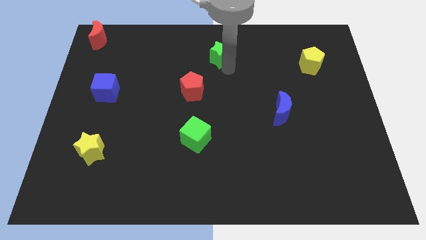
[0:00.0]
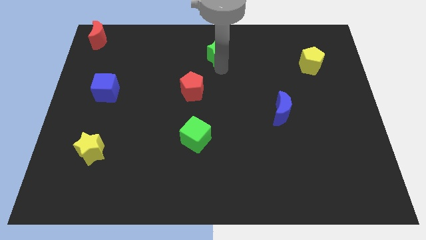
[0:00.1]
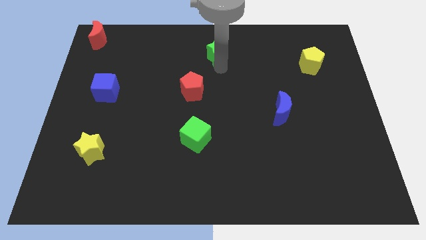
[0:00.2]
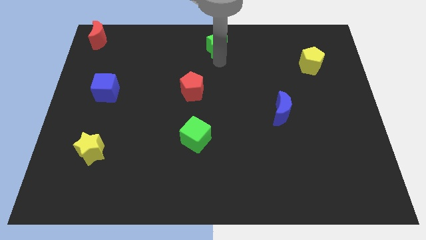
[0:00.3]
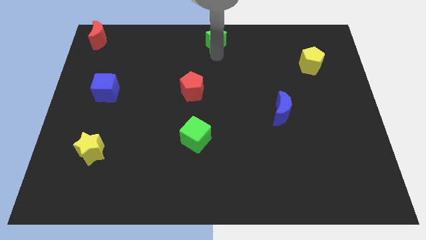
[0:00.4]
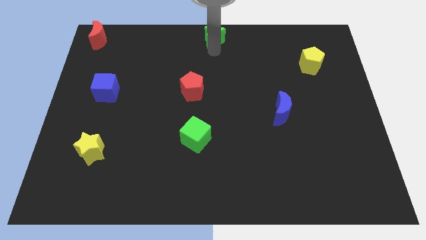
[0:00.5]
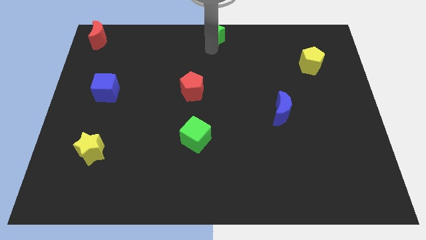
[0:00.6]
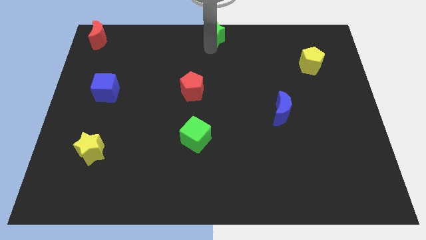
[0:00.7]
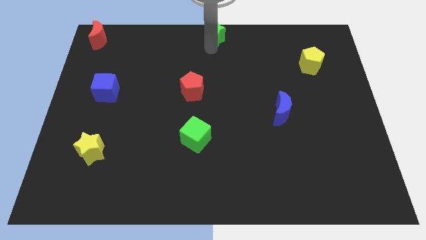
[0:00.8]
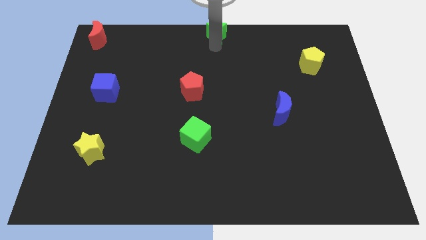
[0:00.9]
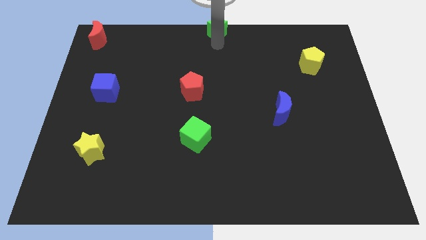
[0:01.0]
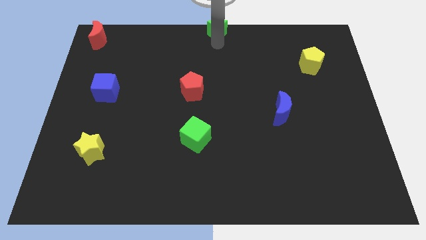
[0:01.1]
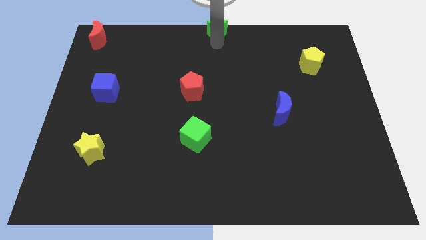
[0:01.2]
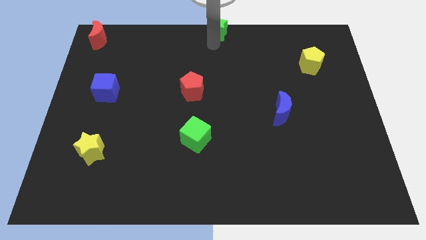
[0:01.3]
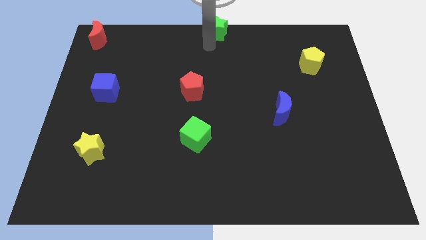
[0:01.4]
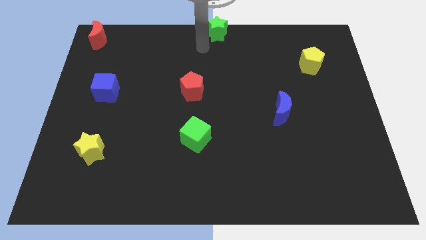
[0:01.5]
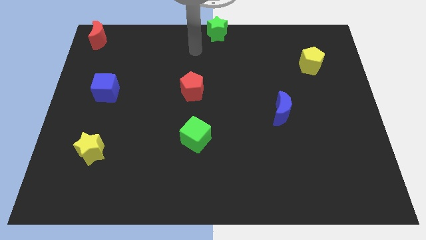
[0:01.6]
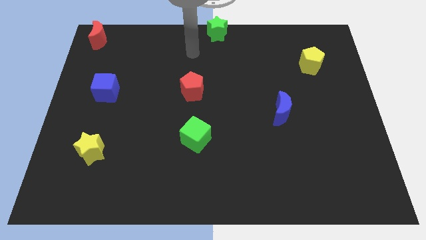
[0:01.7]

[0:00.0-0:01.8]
place the green star in the top middle

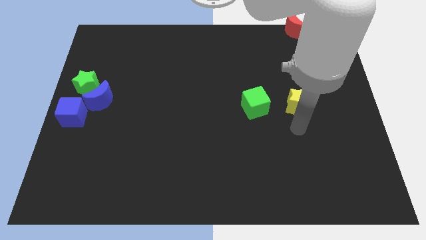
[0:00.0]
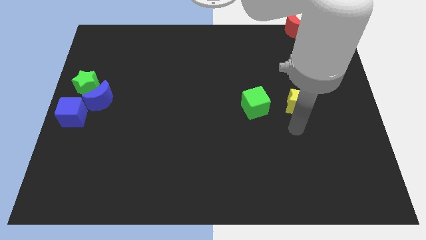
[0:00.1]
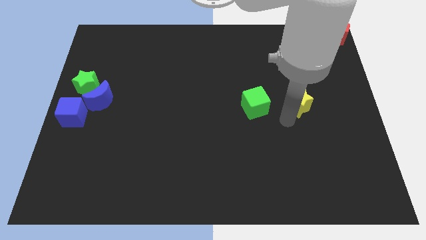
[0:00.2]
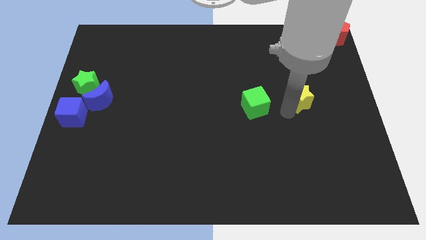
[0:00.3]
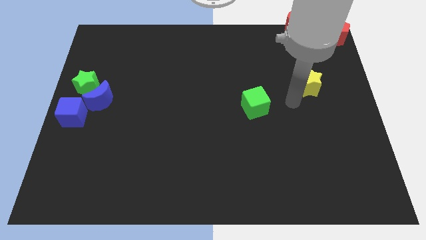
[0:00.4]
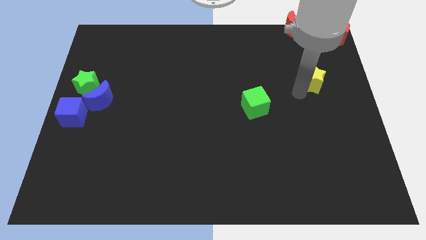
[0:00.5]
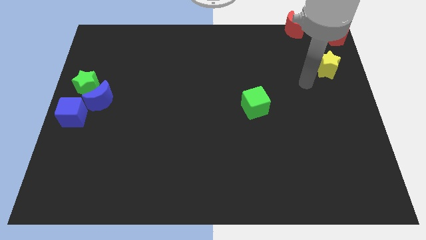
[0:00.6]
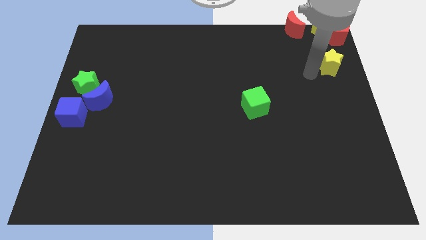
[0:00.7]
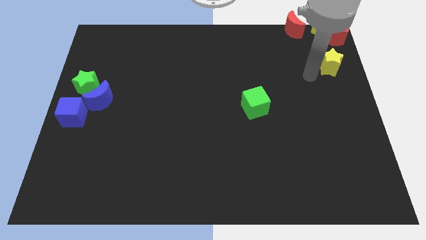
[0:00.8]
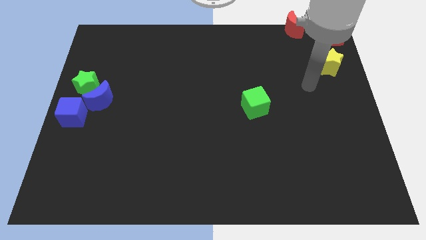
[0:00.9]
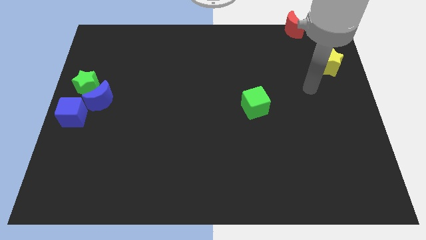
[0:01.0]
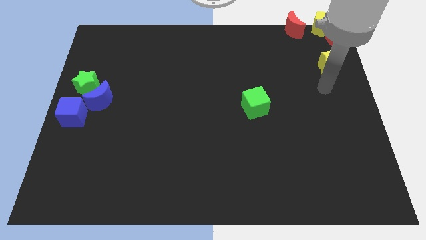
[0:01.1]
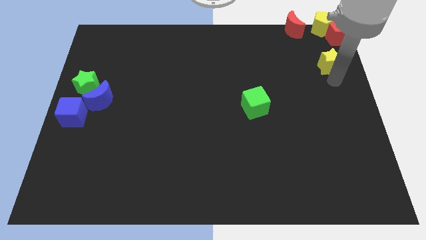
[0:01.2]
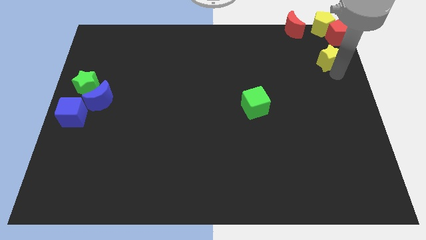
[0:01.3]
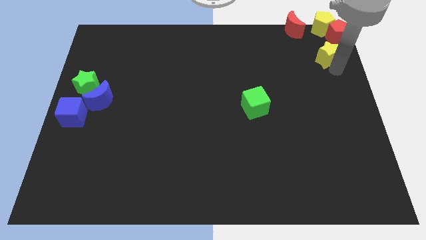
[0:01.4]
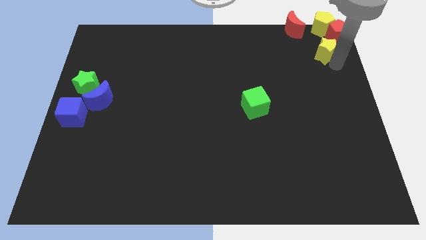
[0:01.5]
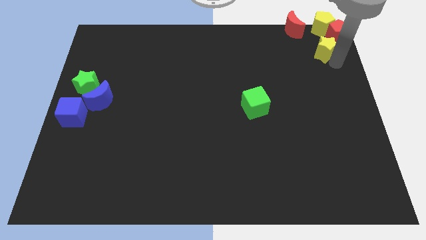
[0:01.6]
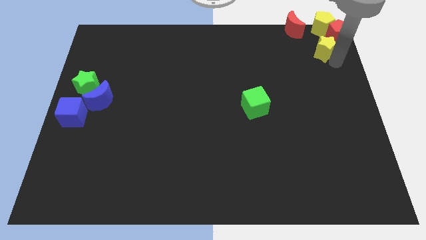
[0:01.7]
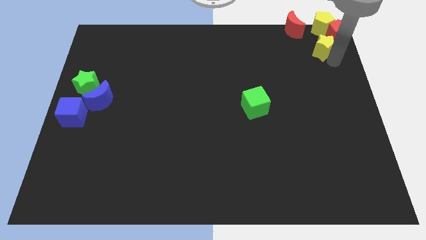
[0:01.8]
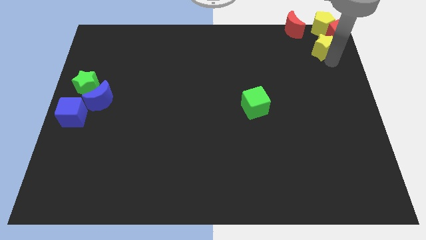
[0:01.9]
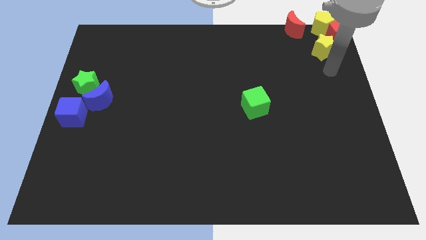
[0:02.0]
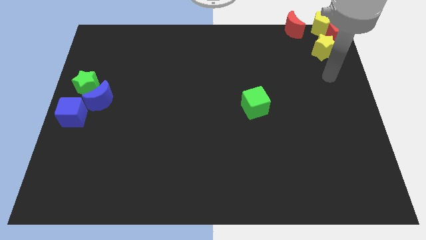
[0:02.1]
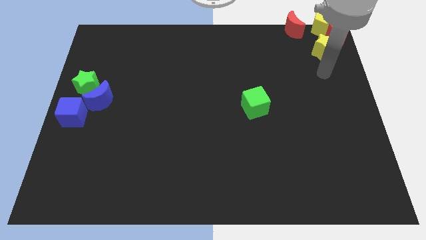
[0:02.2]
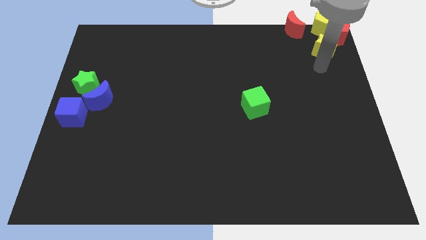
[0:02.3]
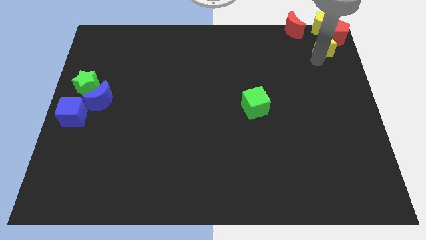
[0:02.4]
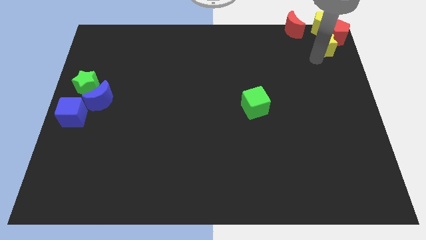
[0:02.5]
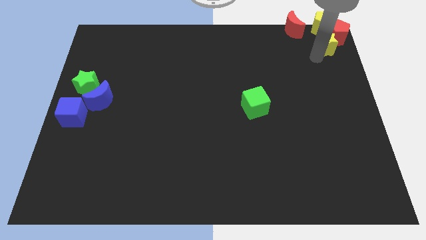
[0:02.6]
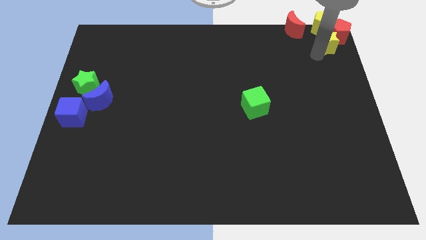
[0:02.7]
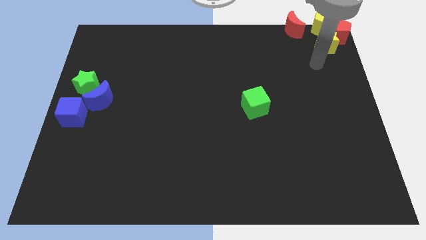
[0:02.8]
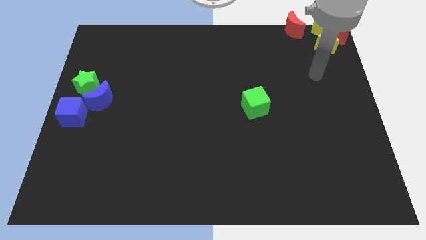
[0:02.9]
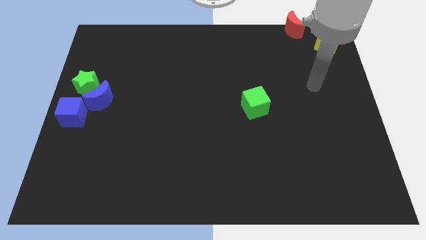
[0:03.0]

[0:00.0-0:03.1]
push the yellow star into the bottom of the red pentagon

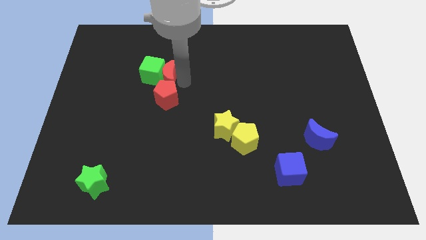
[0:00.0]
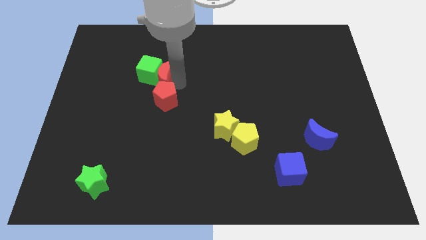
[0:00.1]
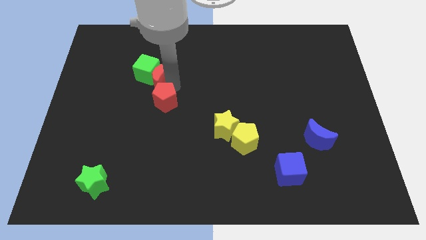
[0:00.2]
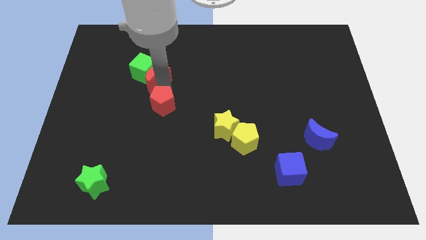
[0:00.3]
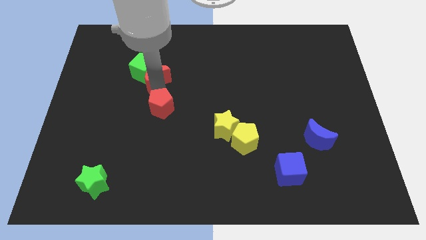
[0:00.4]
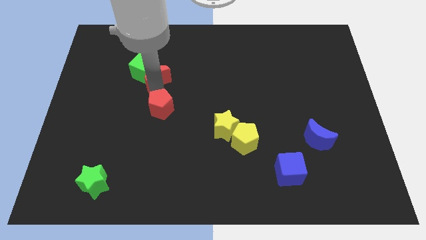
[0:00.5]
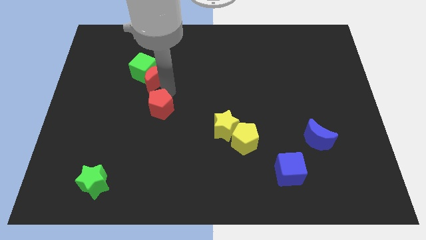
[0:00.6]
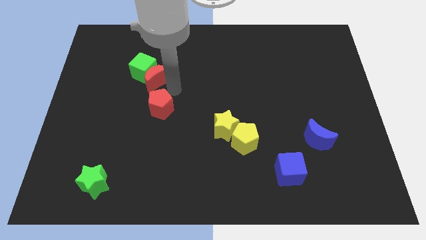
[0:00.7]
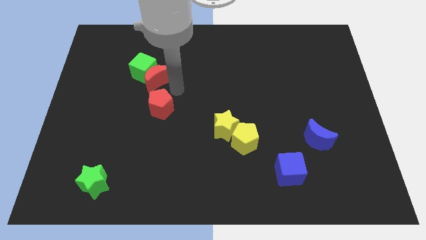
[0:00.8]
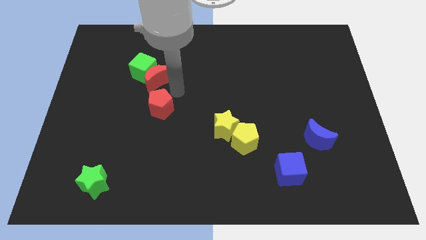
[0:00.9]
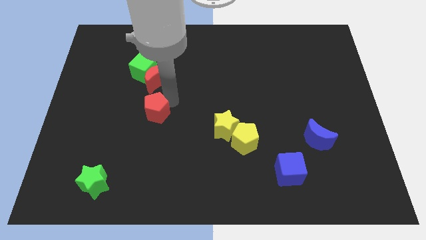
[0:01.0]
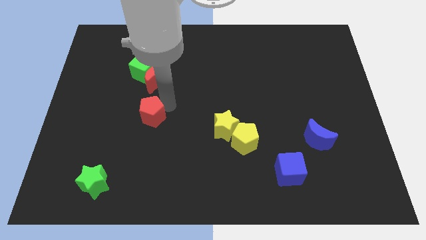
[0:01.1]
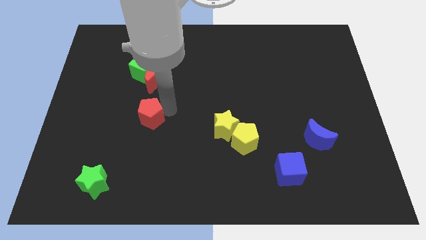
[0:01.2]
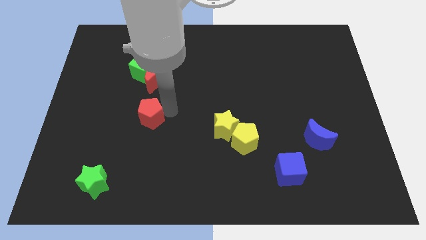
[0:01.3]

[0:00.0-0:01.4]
separate the red pentagon from the red moon

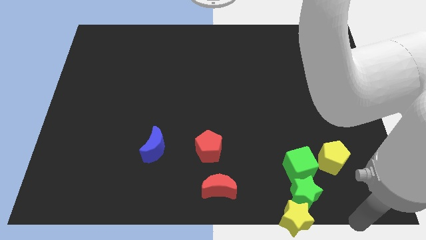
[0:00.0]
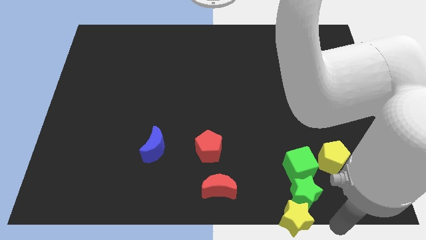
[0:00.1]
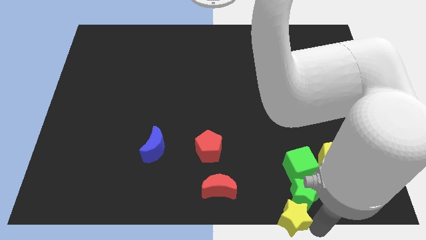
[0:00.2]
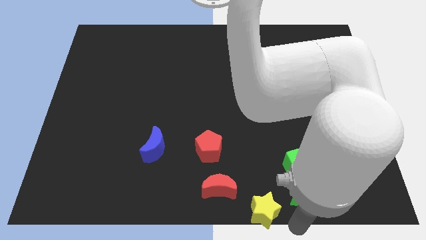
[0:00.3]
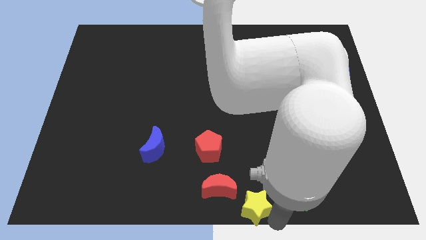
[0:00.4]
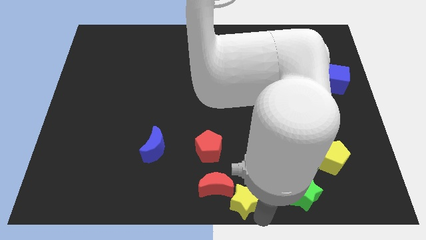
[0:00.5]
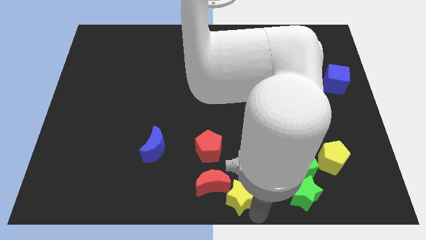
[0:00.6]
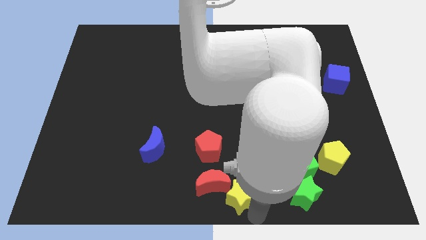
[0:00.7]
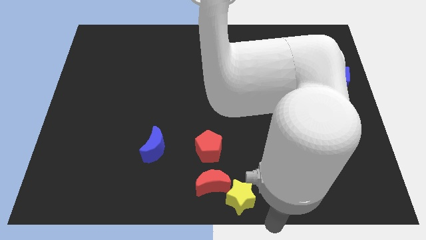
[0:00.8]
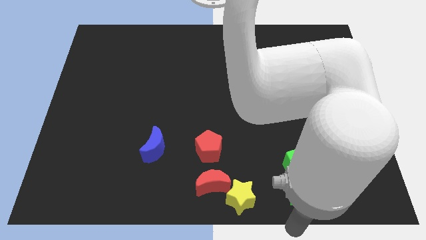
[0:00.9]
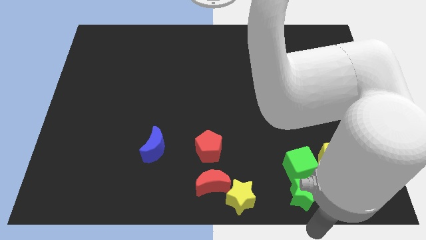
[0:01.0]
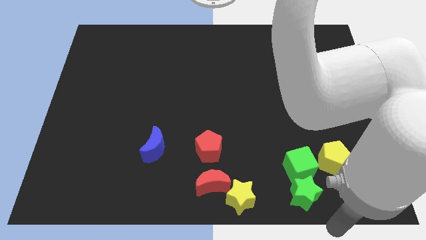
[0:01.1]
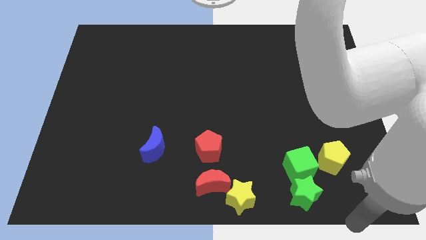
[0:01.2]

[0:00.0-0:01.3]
move the yellow star into the red moon

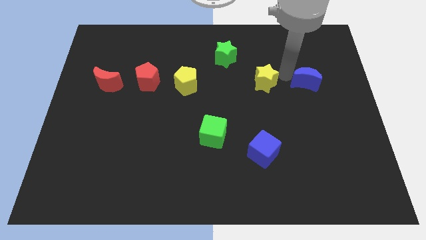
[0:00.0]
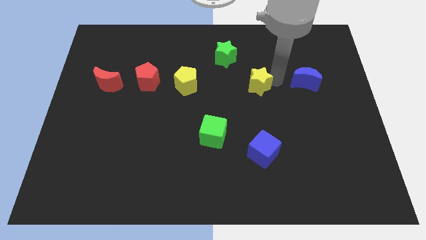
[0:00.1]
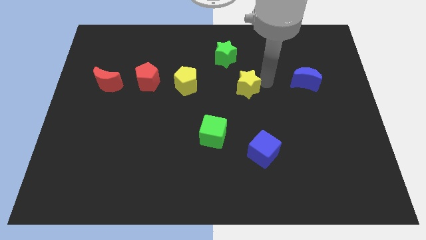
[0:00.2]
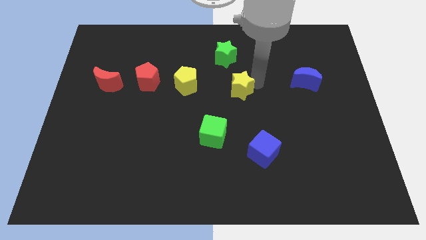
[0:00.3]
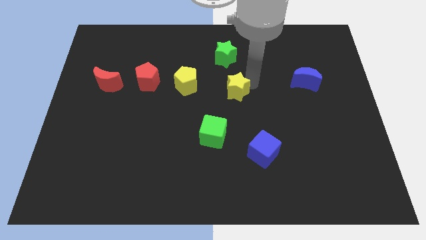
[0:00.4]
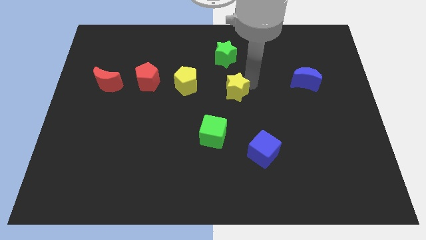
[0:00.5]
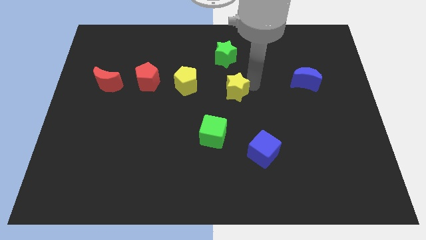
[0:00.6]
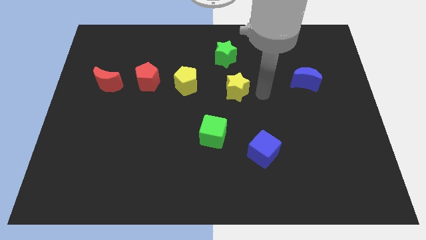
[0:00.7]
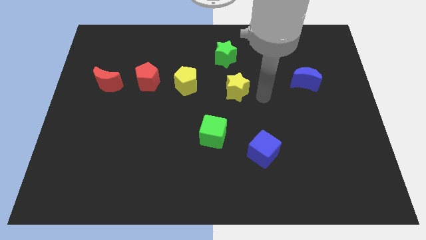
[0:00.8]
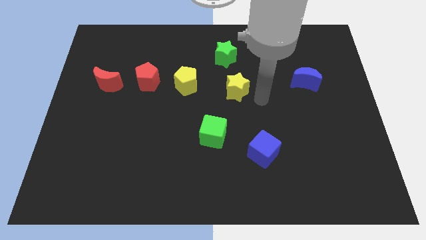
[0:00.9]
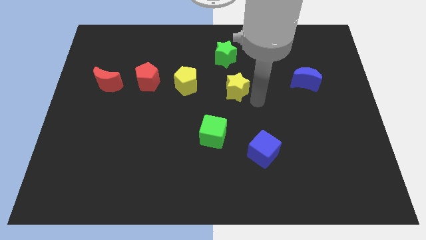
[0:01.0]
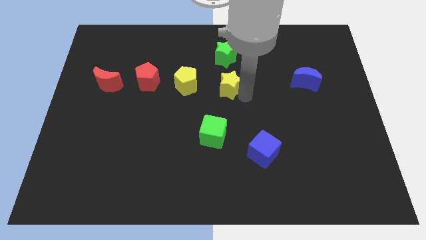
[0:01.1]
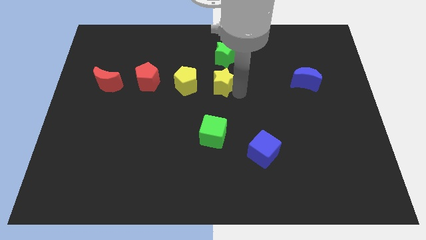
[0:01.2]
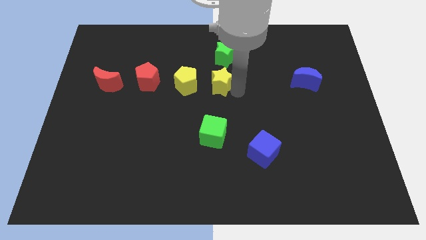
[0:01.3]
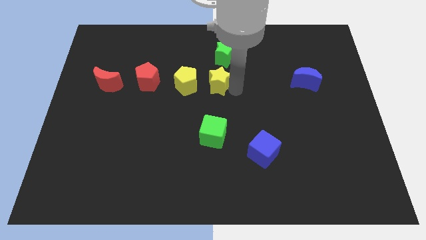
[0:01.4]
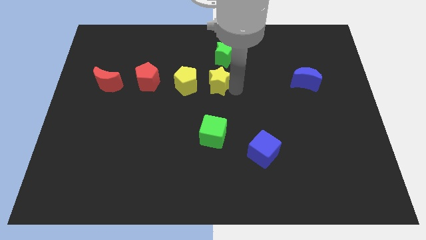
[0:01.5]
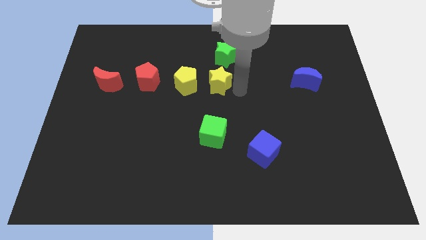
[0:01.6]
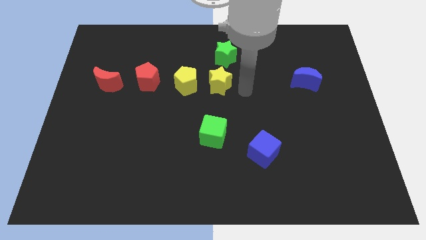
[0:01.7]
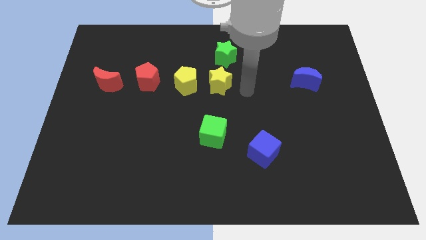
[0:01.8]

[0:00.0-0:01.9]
slightly push the yellow star towards the yellow pentagon
